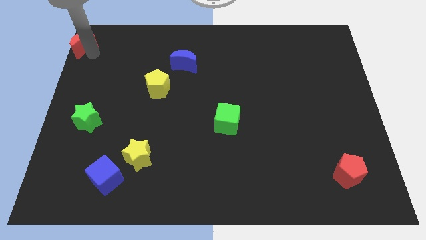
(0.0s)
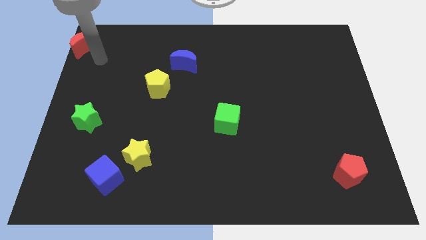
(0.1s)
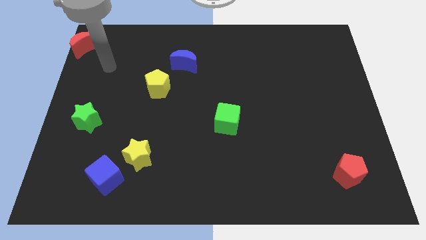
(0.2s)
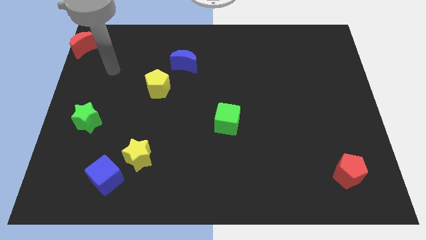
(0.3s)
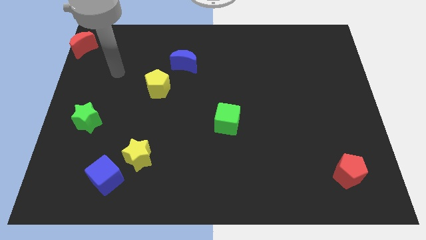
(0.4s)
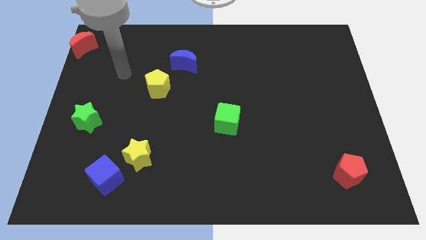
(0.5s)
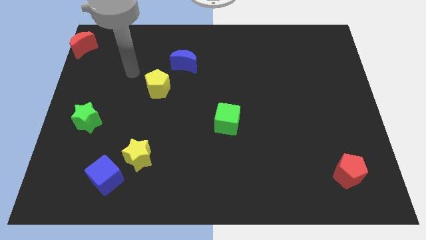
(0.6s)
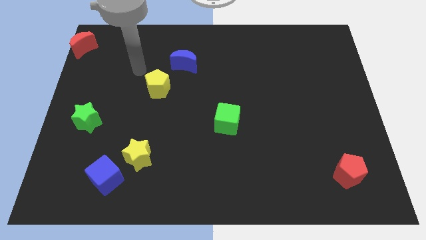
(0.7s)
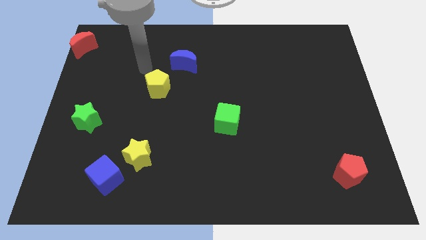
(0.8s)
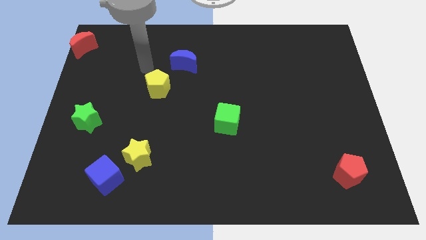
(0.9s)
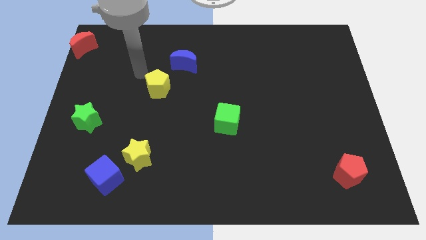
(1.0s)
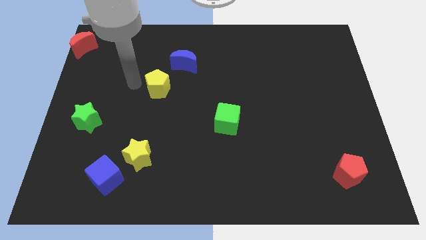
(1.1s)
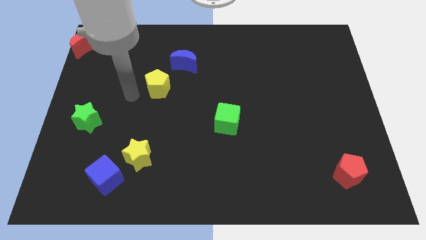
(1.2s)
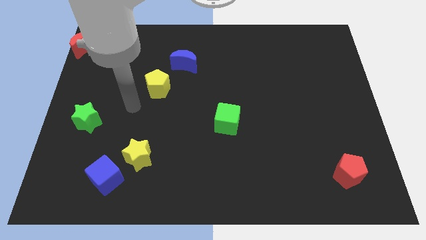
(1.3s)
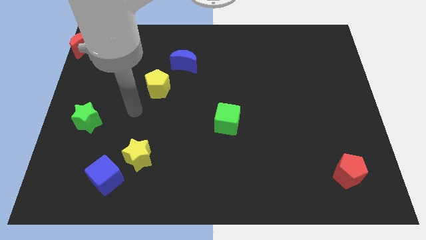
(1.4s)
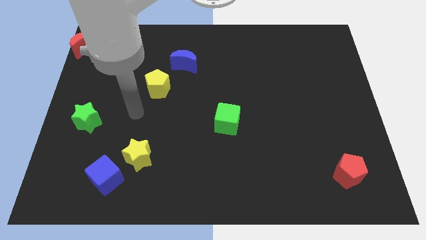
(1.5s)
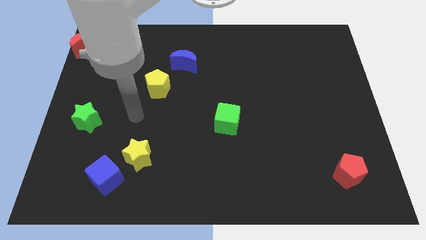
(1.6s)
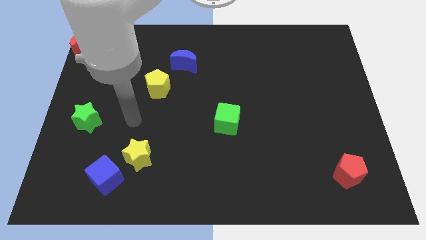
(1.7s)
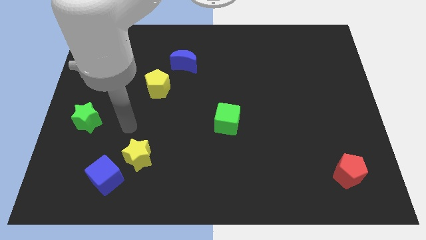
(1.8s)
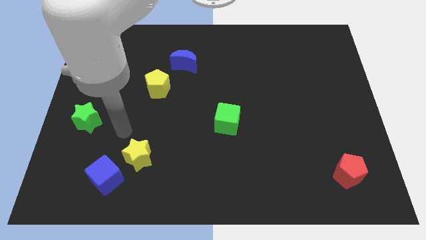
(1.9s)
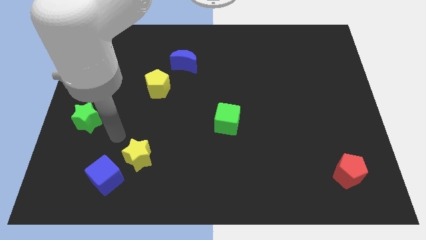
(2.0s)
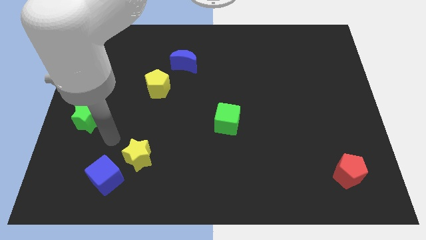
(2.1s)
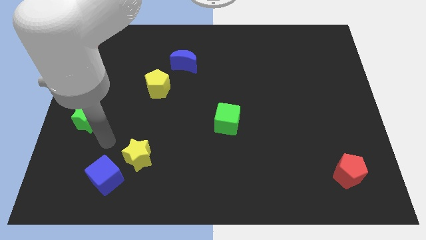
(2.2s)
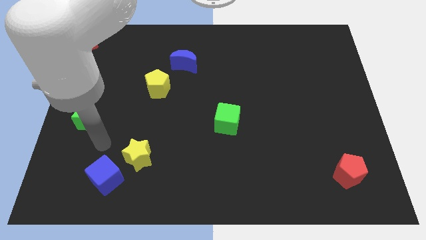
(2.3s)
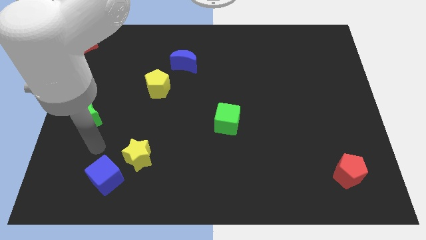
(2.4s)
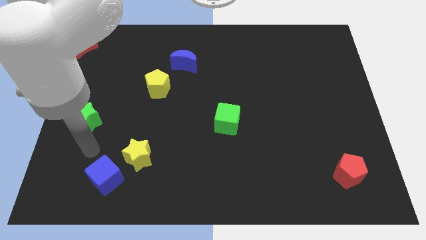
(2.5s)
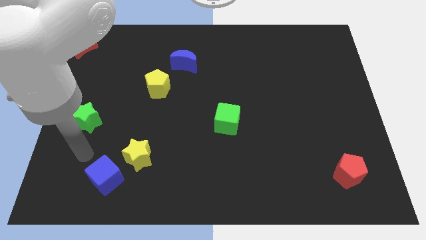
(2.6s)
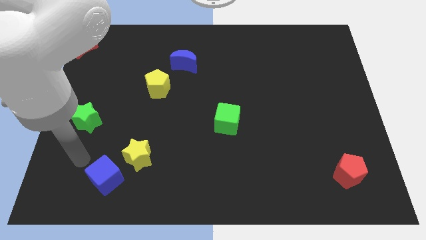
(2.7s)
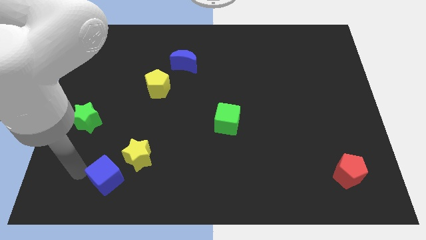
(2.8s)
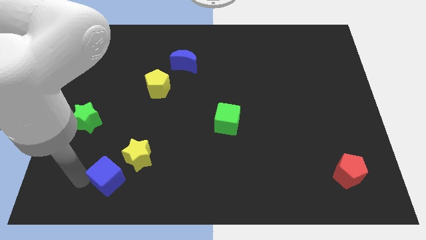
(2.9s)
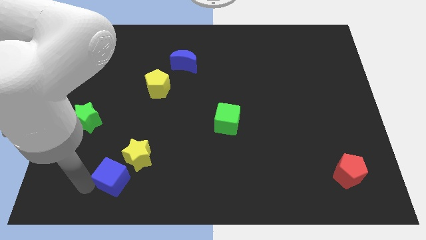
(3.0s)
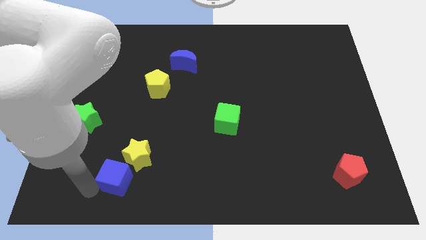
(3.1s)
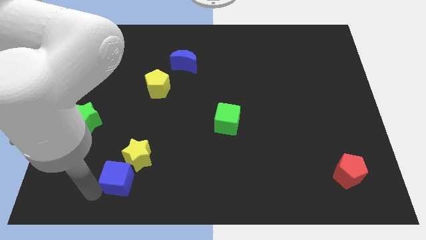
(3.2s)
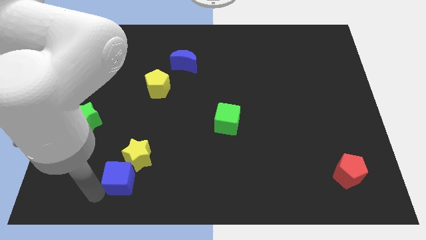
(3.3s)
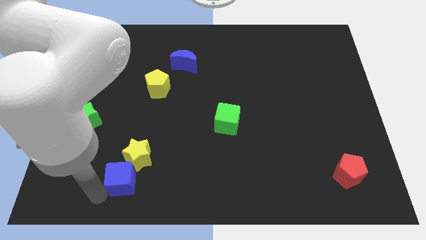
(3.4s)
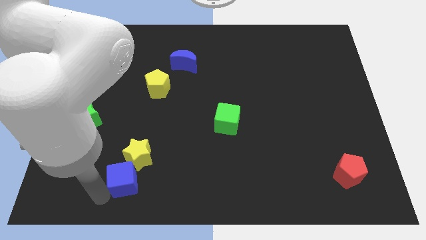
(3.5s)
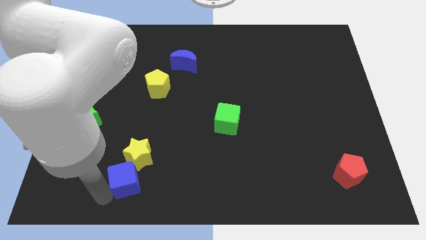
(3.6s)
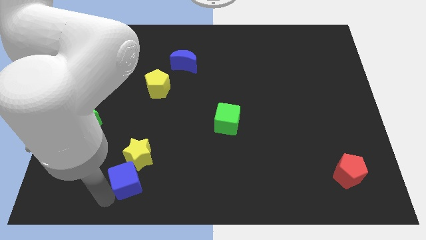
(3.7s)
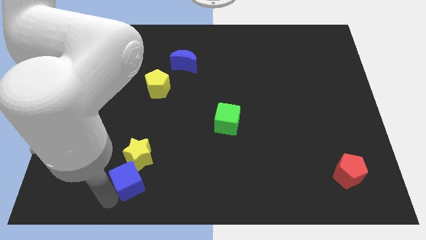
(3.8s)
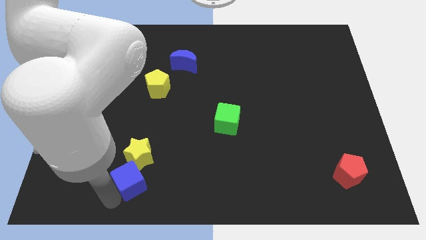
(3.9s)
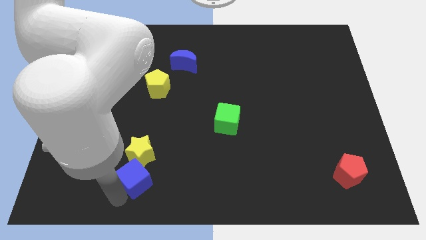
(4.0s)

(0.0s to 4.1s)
push the blue cube into the yellow star

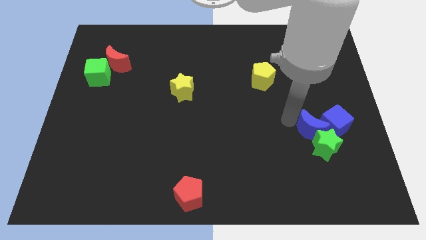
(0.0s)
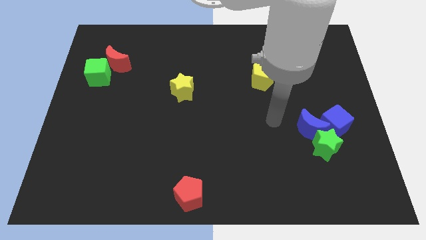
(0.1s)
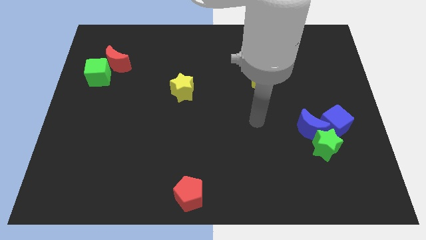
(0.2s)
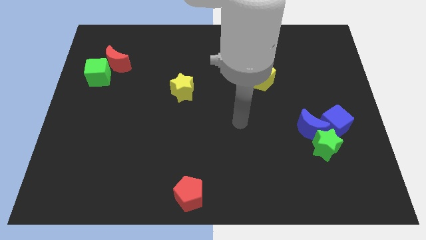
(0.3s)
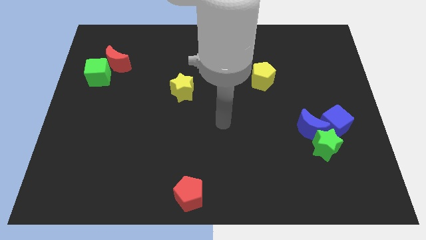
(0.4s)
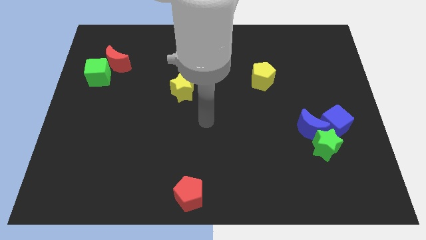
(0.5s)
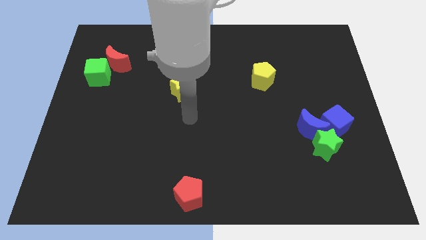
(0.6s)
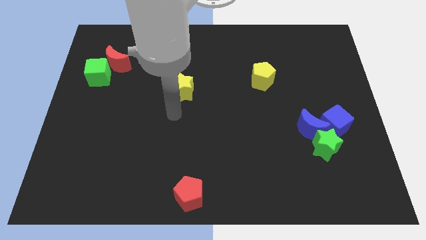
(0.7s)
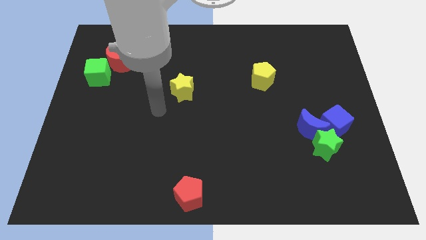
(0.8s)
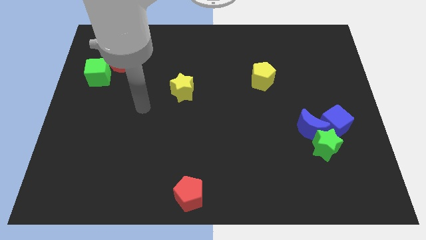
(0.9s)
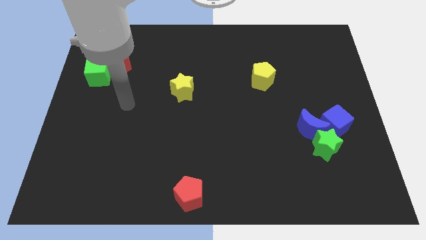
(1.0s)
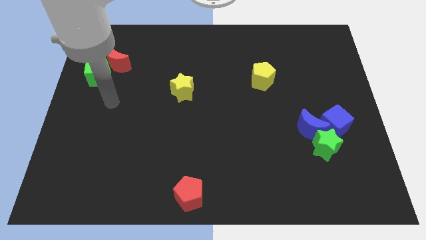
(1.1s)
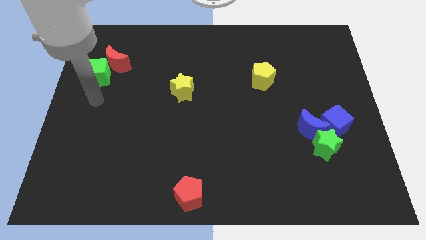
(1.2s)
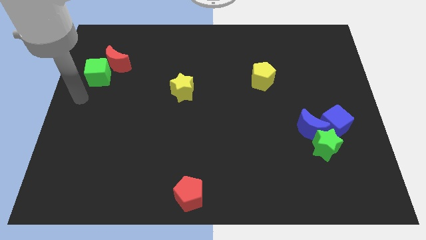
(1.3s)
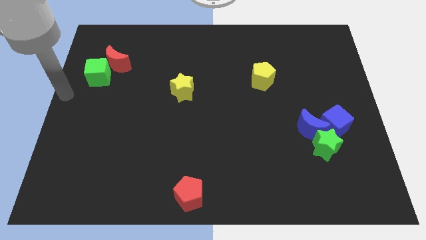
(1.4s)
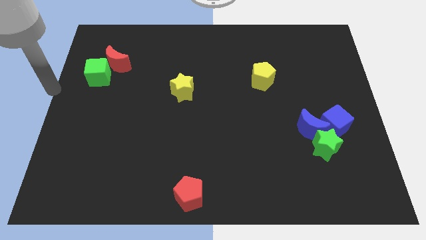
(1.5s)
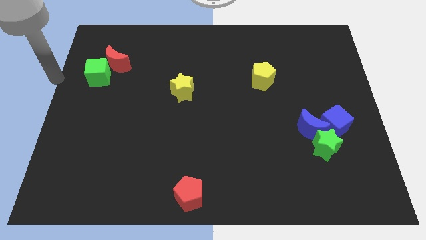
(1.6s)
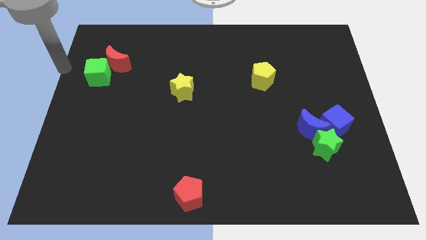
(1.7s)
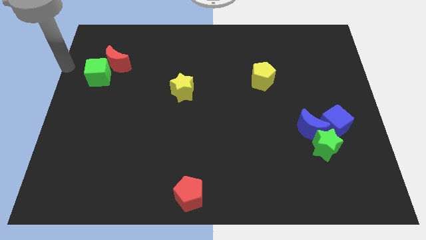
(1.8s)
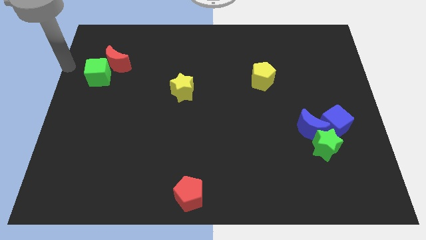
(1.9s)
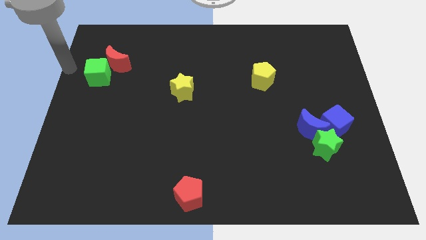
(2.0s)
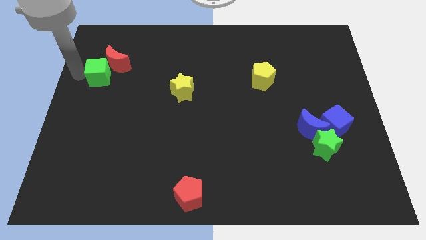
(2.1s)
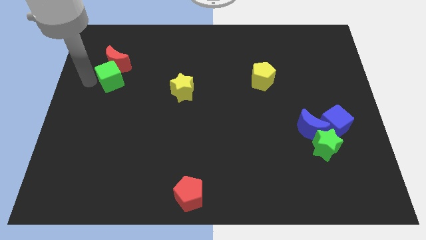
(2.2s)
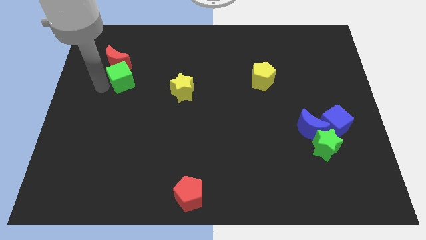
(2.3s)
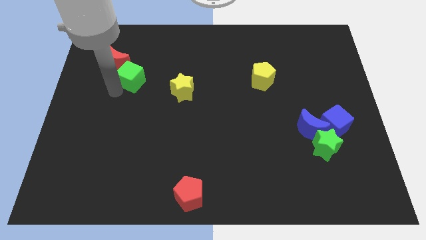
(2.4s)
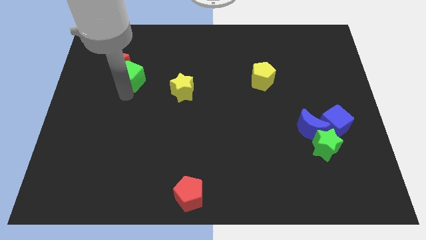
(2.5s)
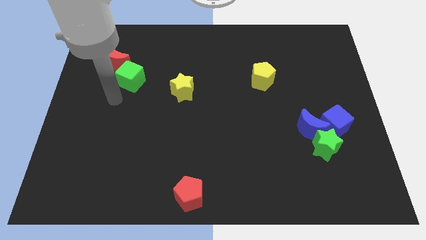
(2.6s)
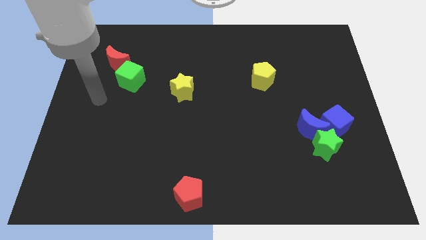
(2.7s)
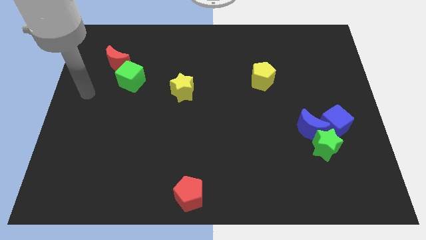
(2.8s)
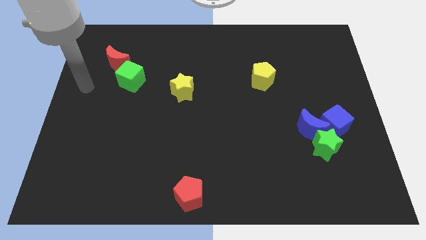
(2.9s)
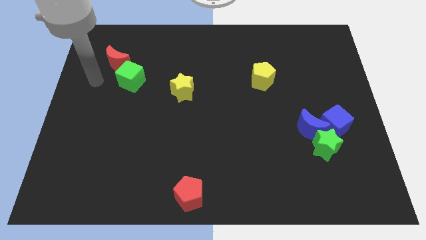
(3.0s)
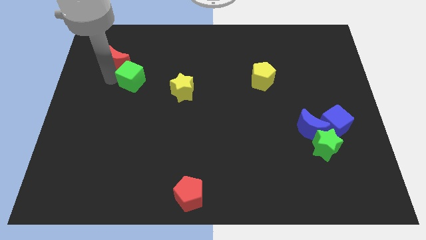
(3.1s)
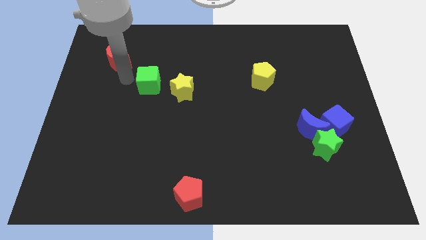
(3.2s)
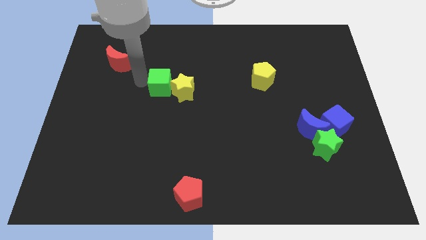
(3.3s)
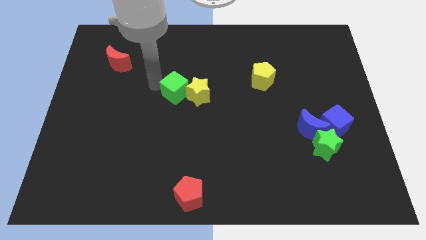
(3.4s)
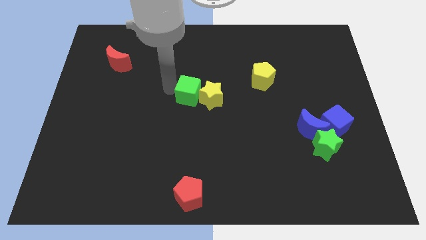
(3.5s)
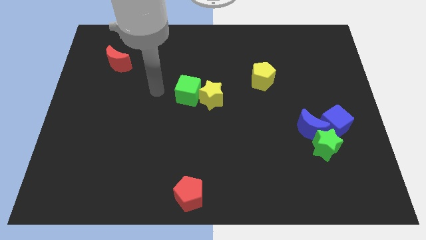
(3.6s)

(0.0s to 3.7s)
slide the green cube into the left side of the yellow star

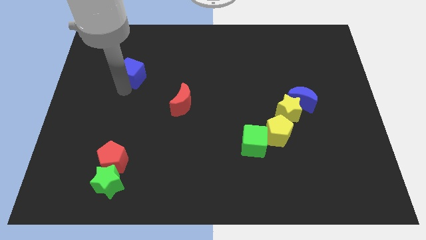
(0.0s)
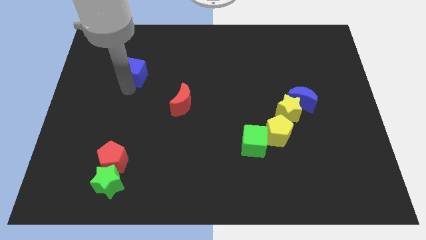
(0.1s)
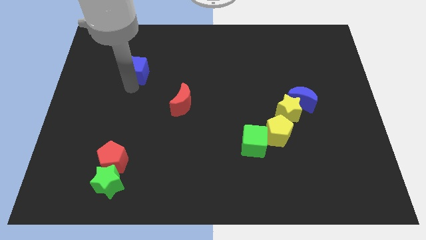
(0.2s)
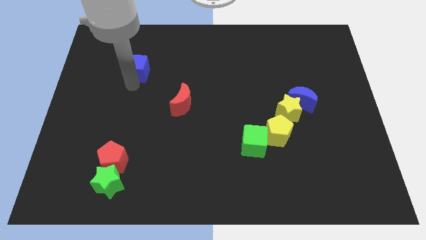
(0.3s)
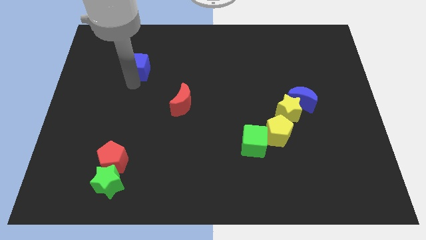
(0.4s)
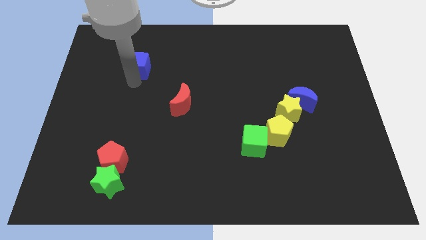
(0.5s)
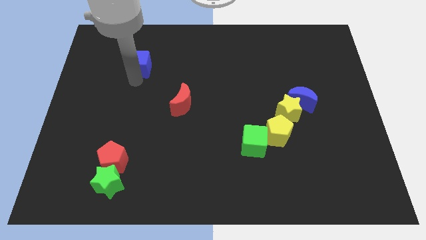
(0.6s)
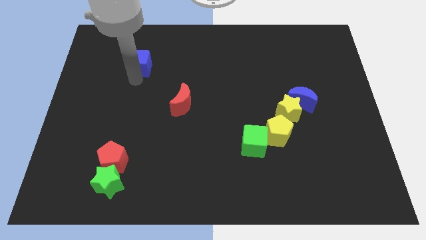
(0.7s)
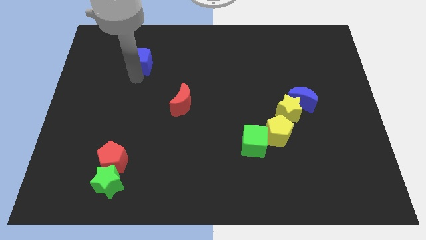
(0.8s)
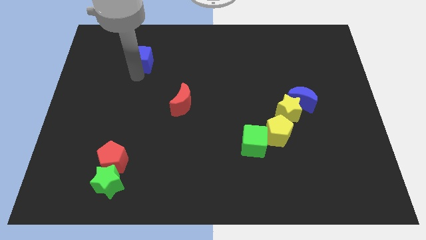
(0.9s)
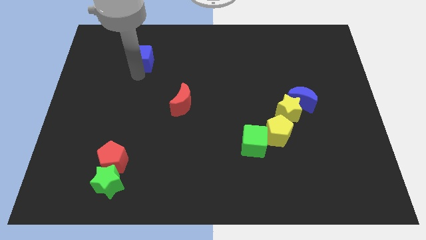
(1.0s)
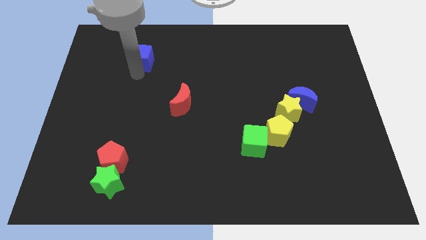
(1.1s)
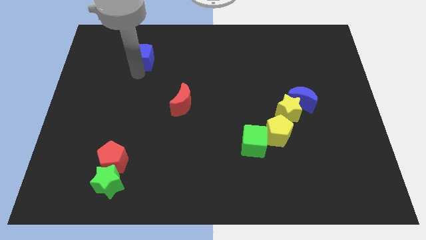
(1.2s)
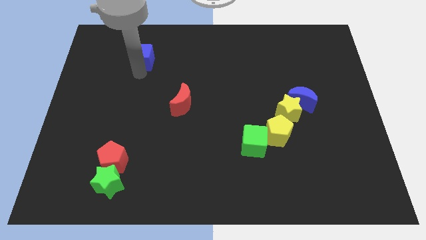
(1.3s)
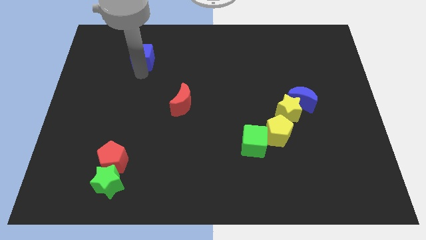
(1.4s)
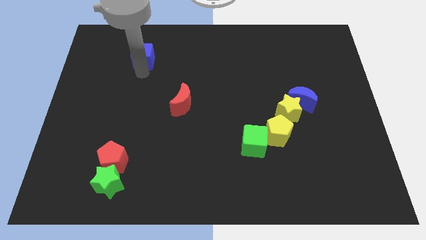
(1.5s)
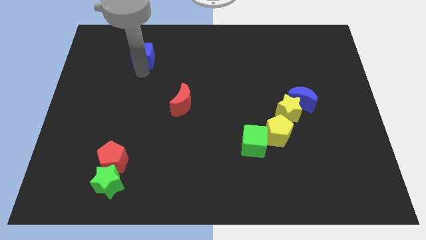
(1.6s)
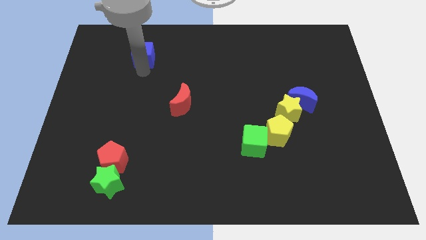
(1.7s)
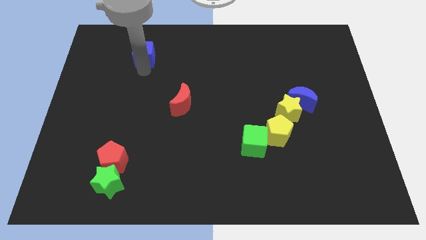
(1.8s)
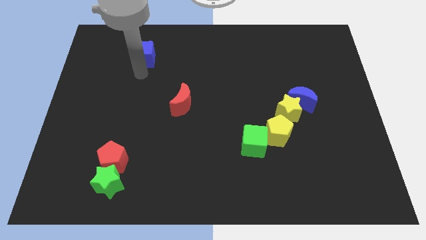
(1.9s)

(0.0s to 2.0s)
place blue cube vertically above the red pentagon
